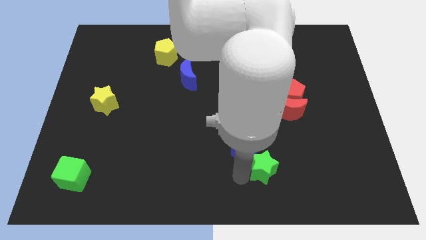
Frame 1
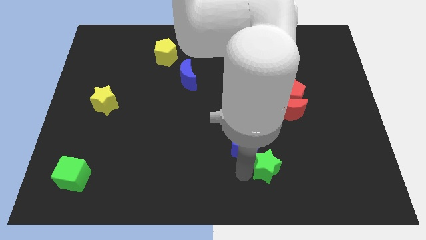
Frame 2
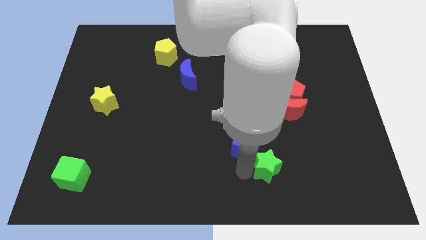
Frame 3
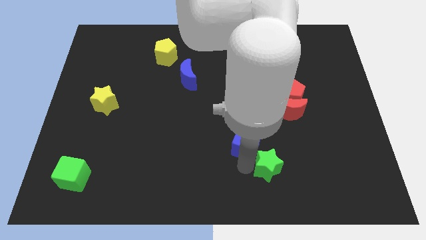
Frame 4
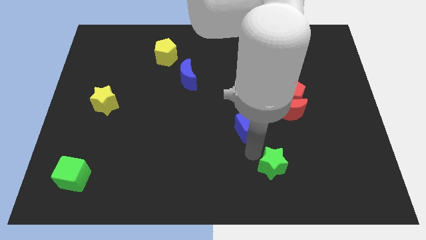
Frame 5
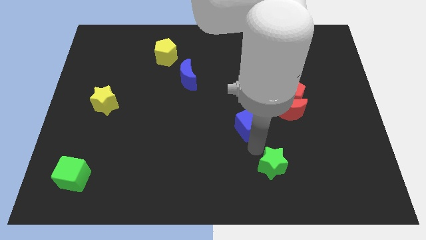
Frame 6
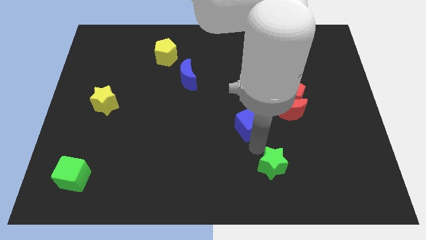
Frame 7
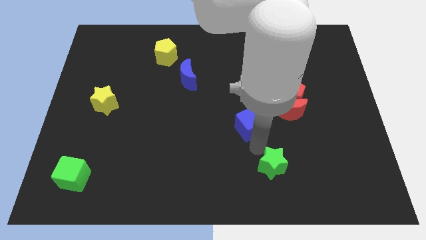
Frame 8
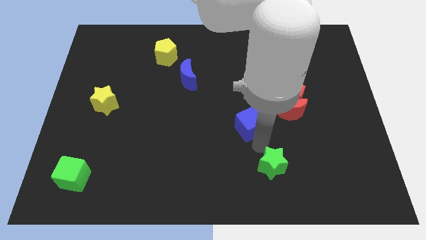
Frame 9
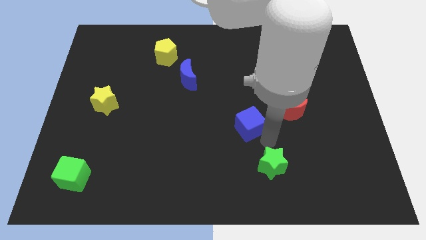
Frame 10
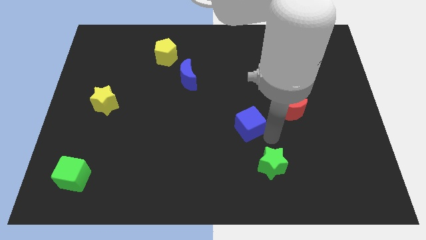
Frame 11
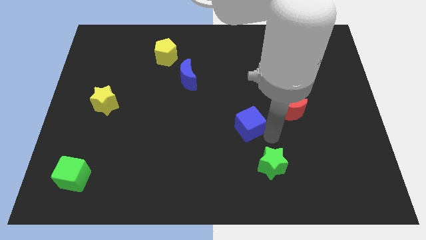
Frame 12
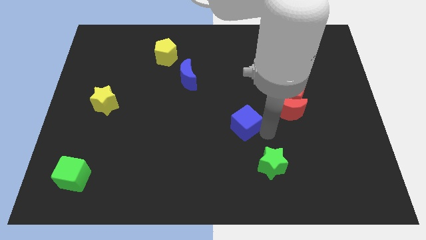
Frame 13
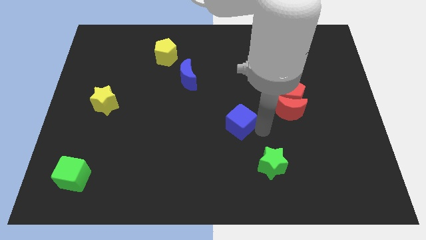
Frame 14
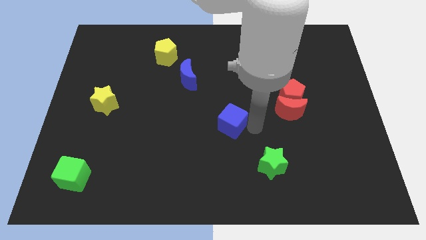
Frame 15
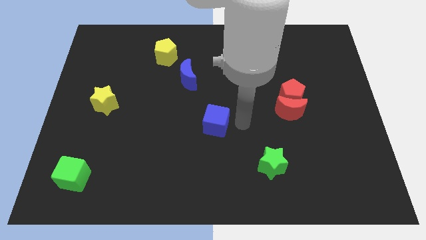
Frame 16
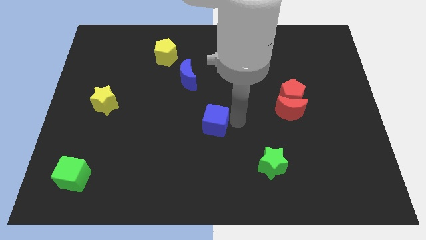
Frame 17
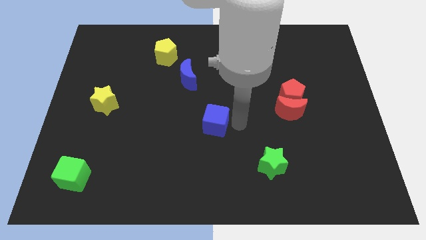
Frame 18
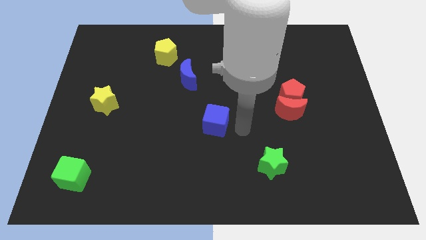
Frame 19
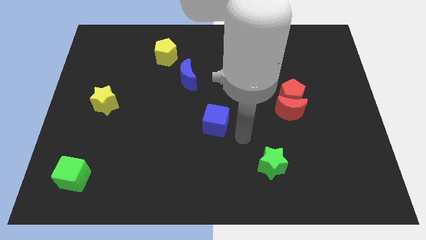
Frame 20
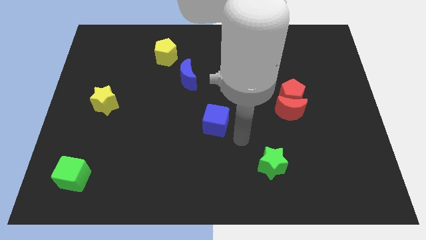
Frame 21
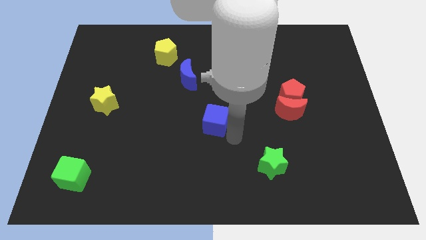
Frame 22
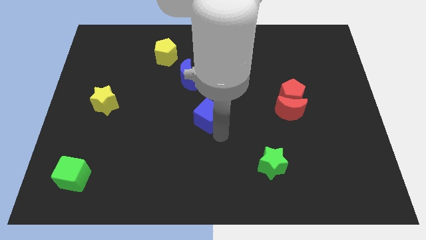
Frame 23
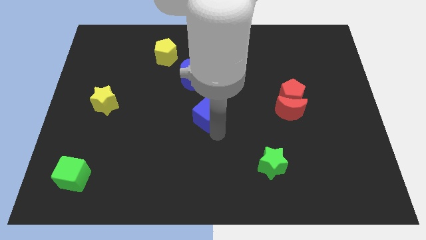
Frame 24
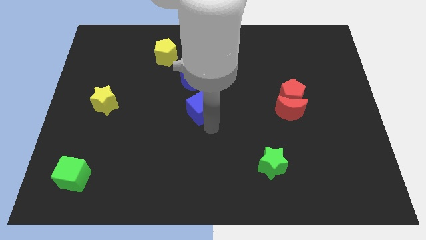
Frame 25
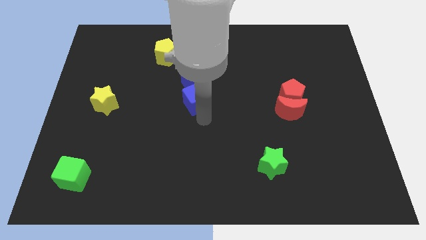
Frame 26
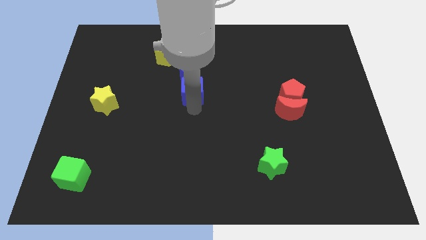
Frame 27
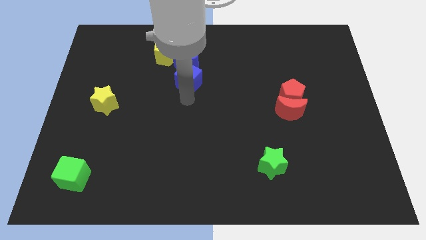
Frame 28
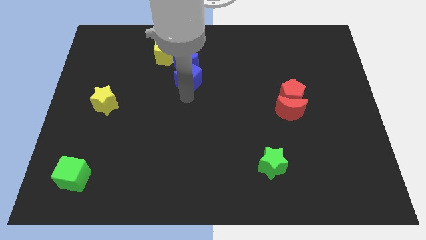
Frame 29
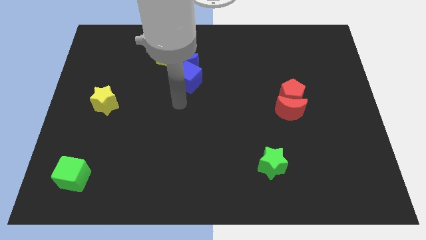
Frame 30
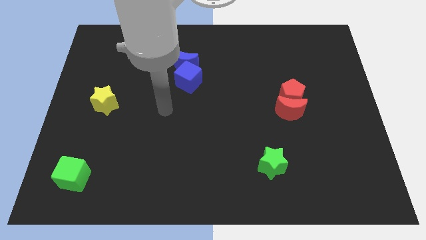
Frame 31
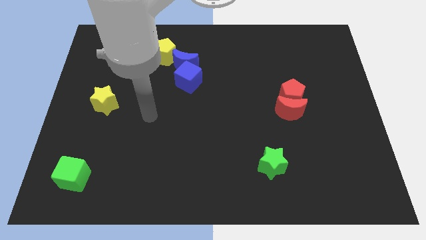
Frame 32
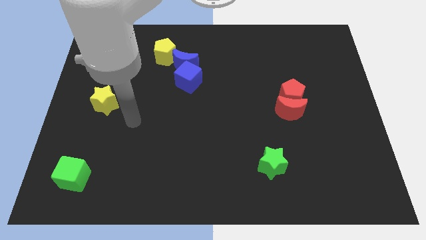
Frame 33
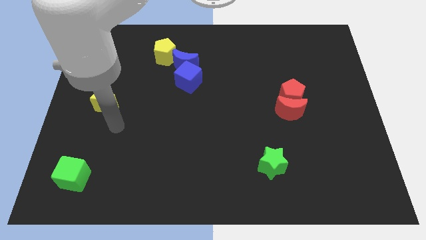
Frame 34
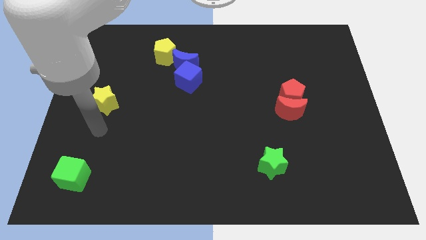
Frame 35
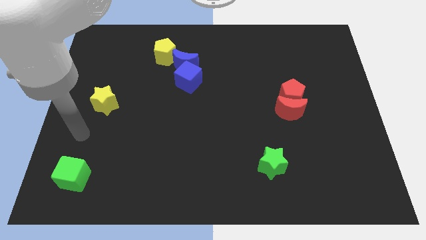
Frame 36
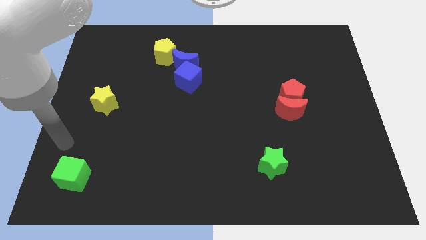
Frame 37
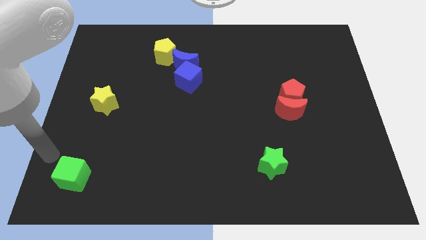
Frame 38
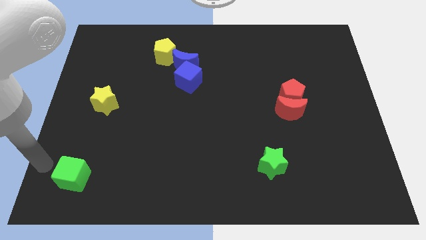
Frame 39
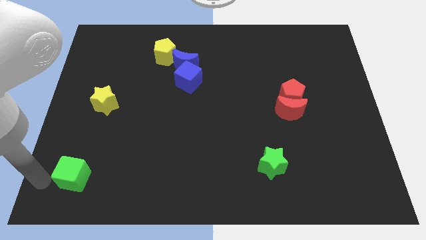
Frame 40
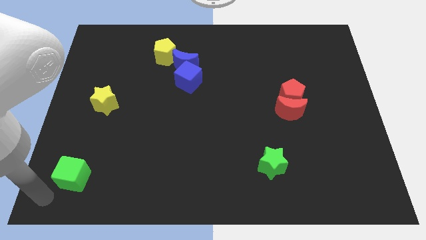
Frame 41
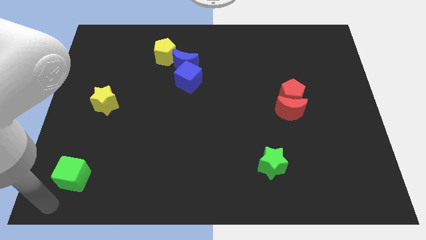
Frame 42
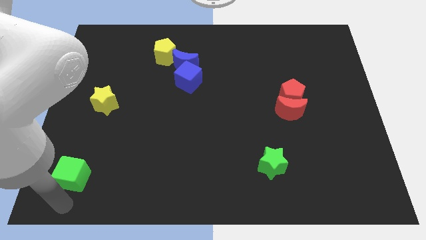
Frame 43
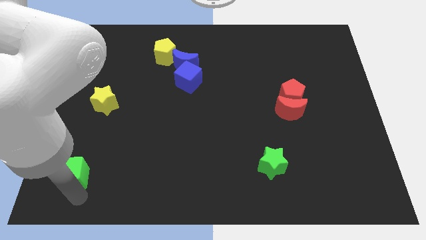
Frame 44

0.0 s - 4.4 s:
push the blue cube into the blue crescent

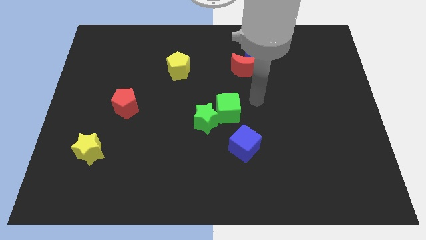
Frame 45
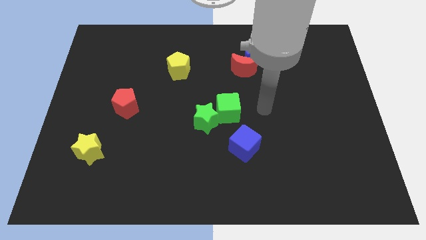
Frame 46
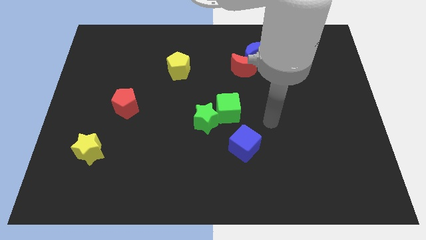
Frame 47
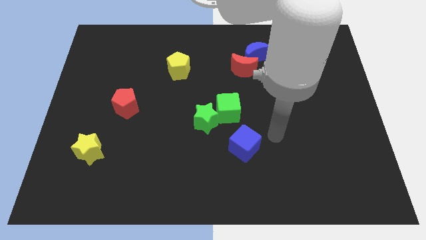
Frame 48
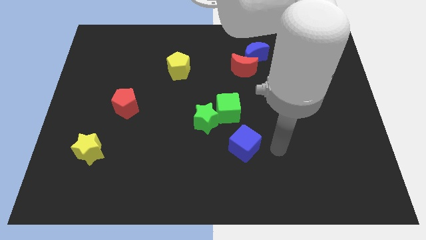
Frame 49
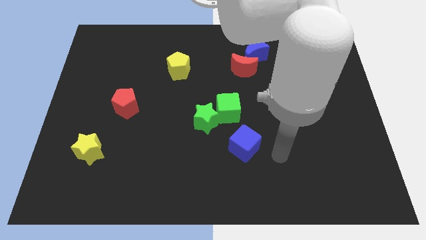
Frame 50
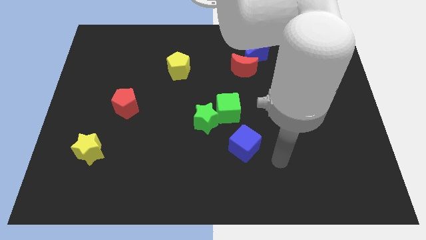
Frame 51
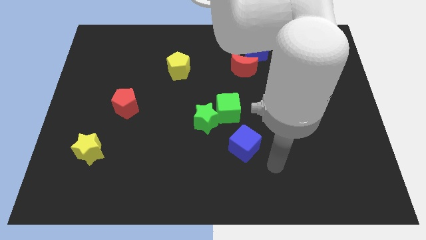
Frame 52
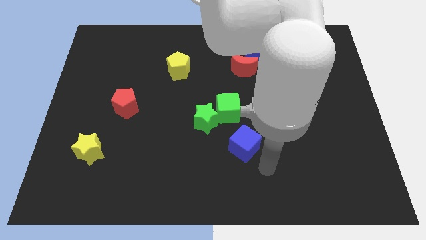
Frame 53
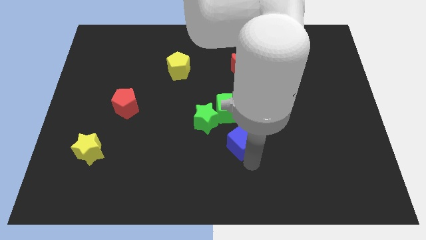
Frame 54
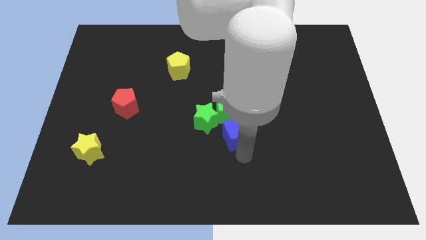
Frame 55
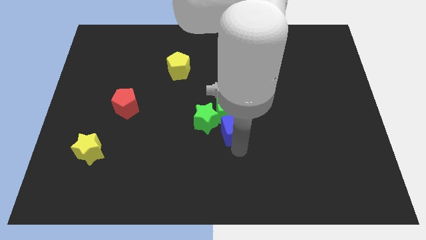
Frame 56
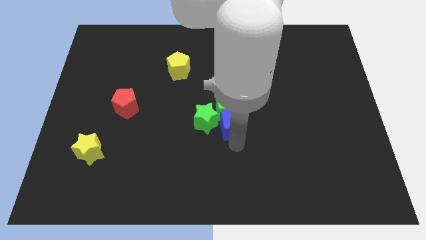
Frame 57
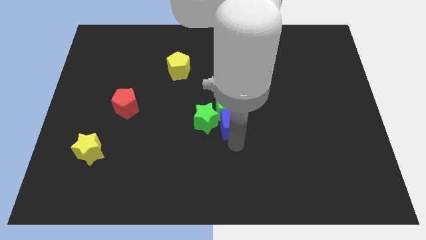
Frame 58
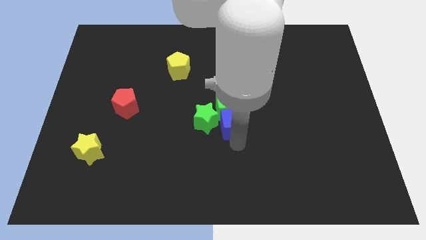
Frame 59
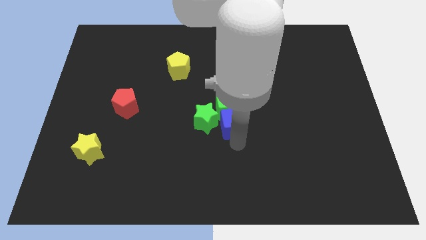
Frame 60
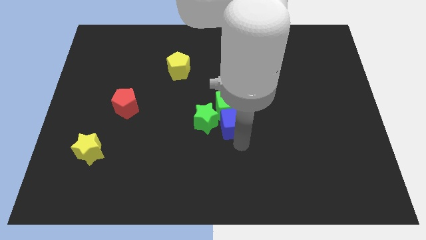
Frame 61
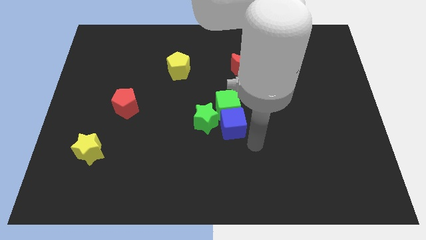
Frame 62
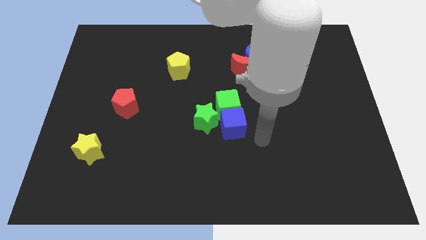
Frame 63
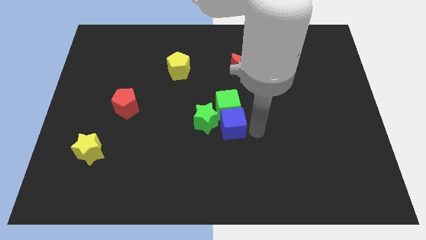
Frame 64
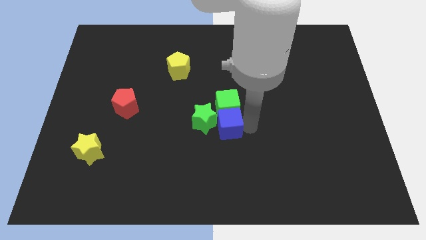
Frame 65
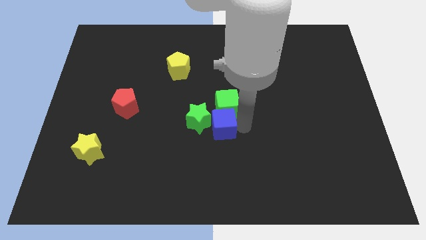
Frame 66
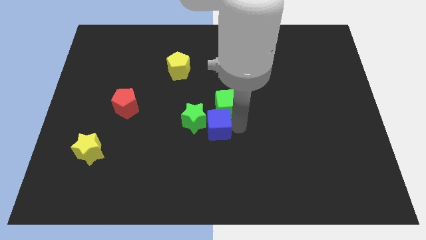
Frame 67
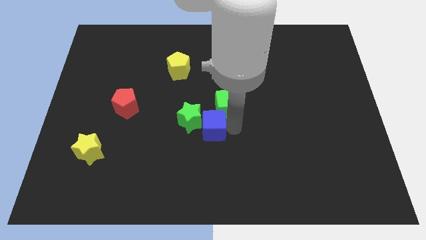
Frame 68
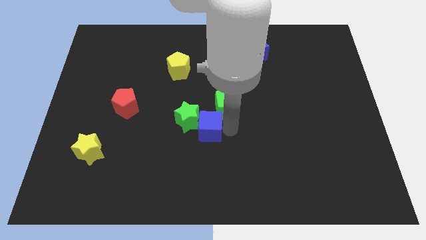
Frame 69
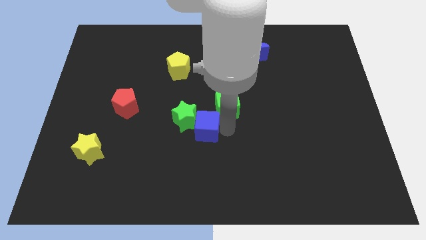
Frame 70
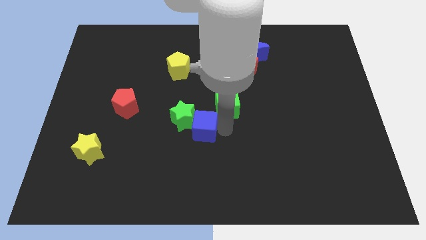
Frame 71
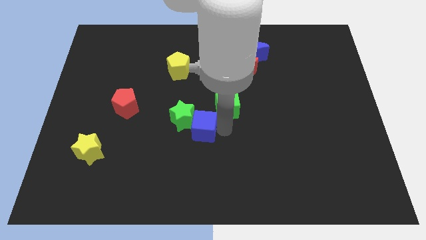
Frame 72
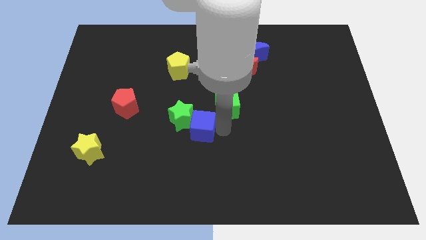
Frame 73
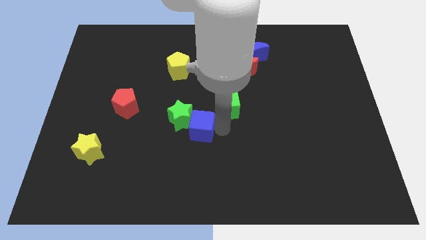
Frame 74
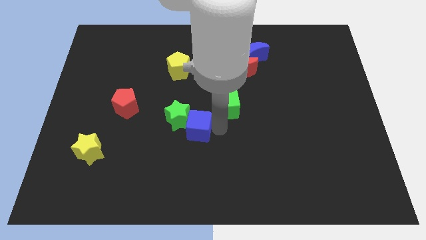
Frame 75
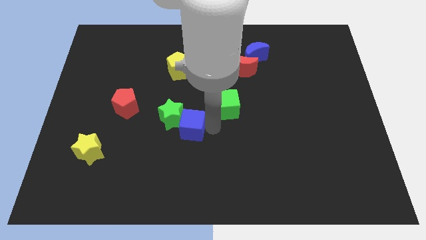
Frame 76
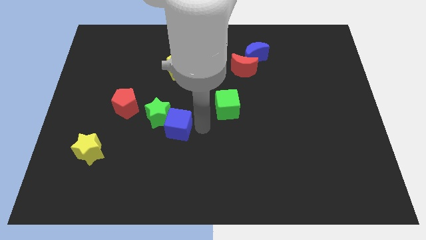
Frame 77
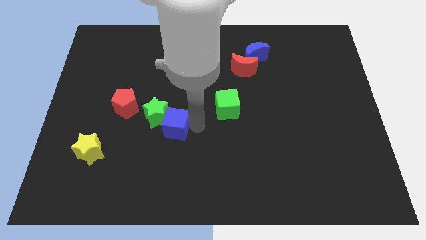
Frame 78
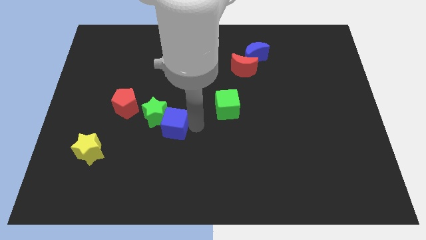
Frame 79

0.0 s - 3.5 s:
slide the blue cube and green star towards the red pentagon

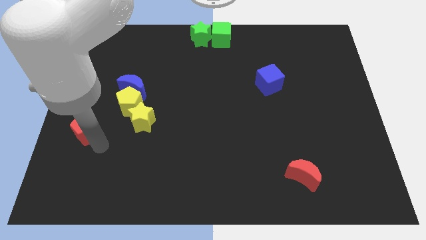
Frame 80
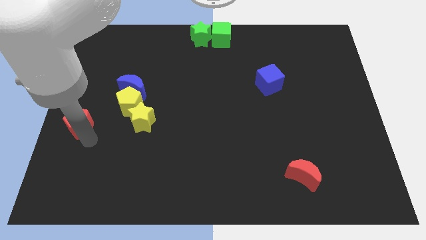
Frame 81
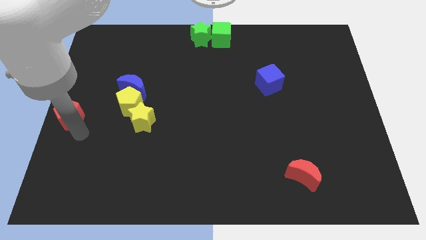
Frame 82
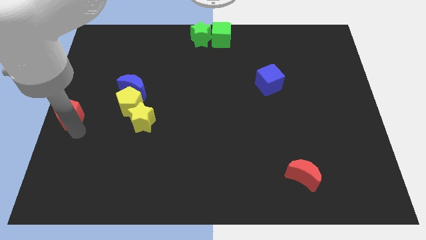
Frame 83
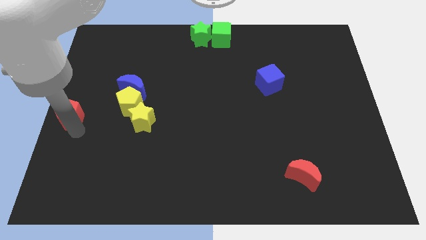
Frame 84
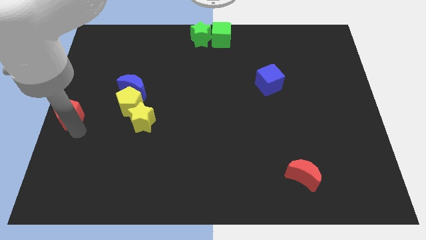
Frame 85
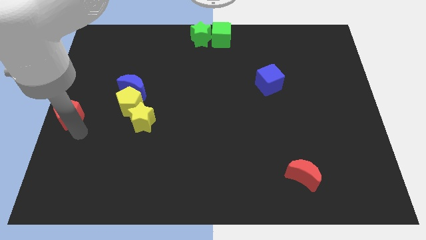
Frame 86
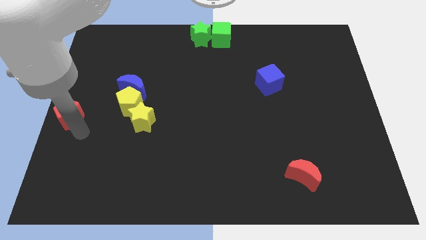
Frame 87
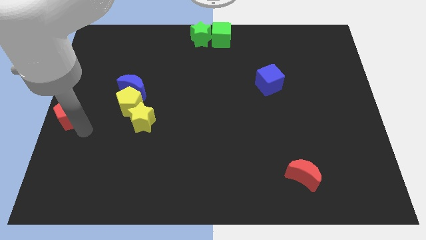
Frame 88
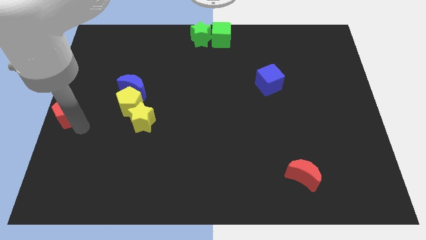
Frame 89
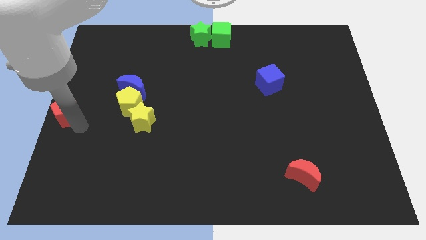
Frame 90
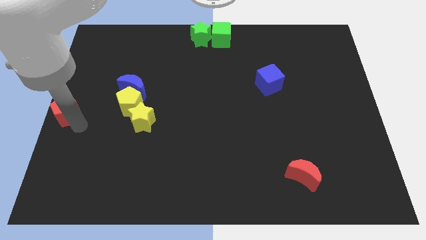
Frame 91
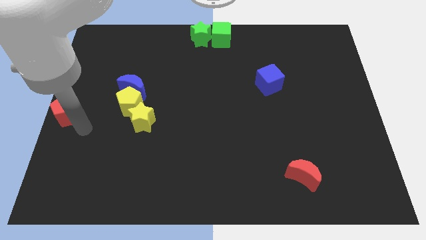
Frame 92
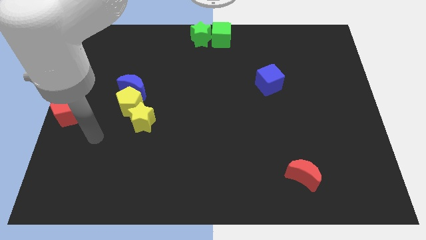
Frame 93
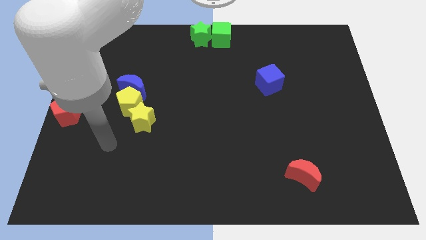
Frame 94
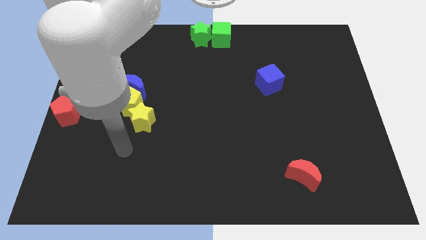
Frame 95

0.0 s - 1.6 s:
place the red pentagon at the center left side of the board
